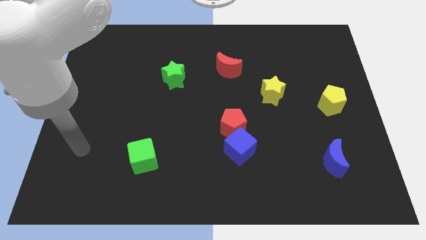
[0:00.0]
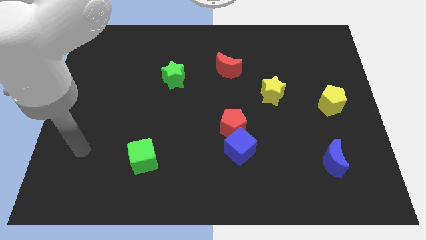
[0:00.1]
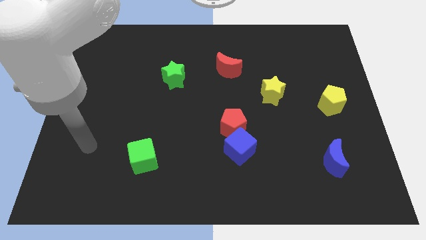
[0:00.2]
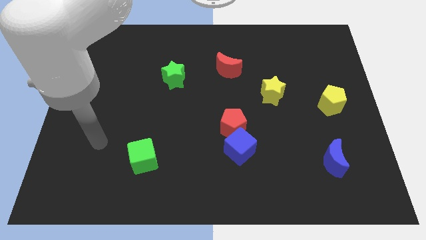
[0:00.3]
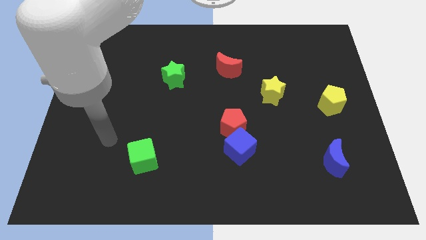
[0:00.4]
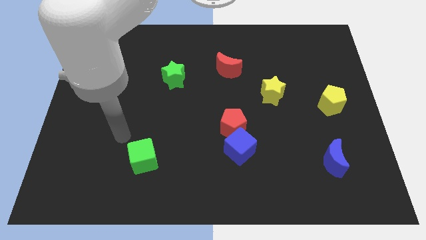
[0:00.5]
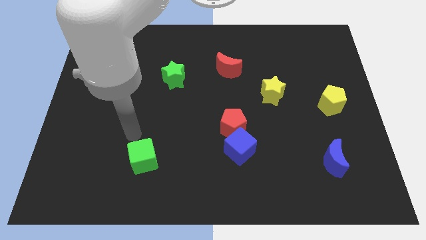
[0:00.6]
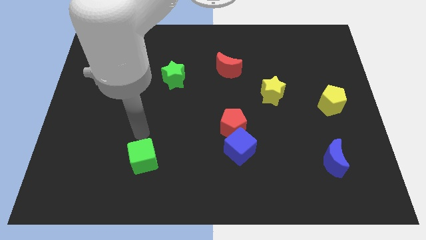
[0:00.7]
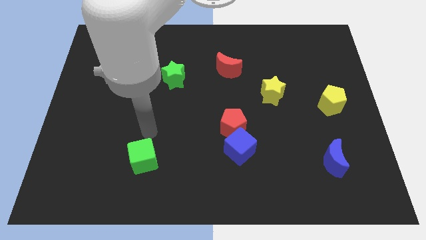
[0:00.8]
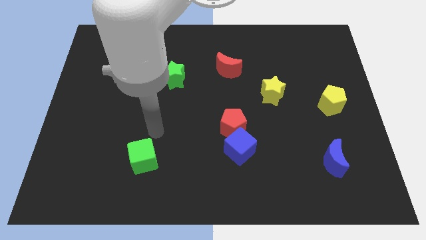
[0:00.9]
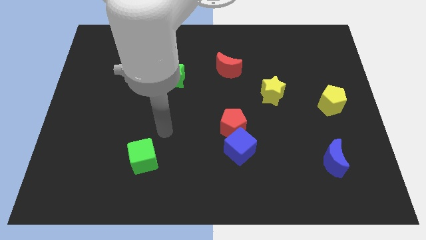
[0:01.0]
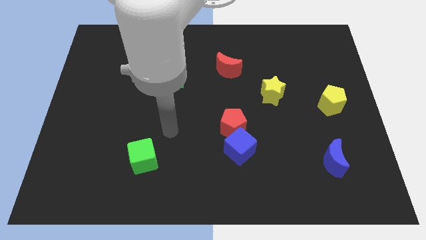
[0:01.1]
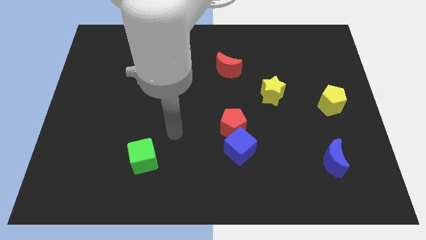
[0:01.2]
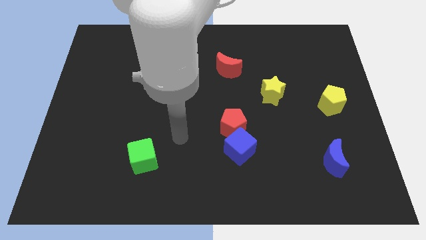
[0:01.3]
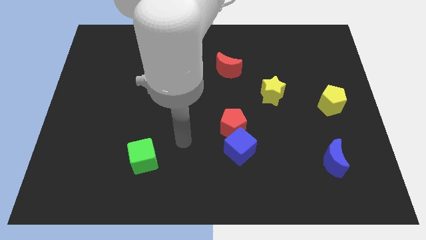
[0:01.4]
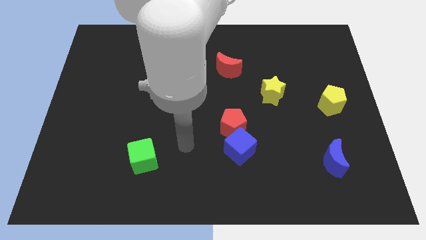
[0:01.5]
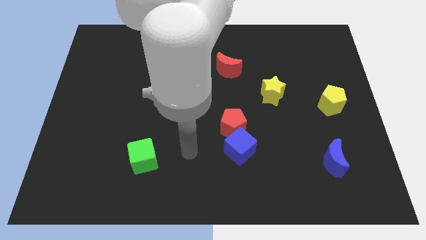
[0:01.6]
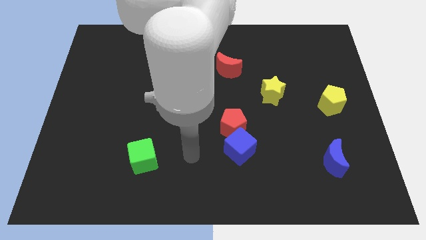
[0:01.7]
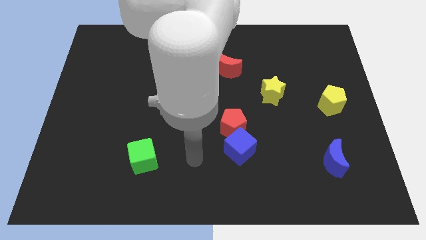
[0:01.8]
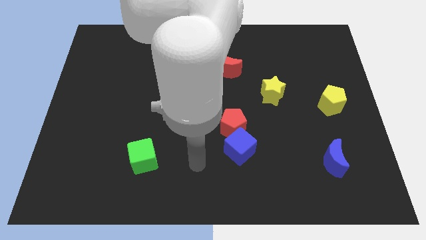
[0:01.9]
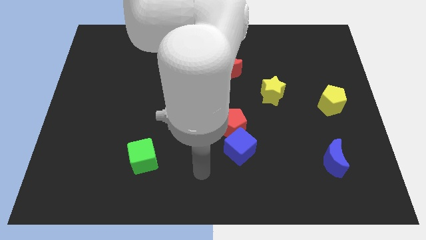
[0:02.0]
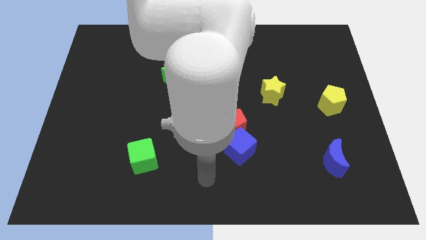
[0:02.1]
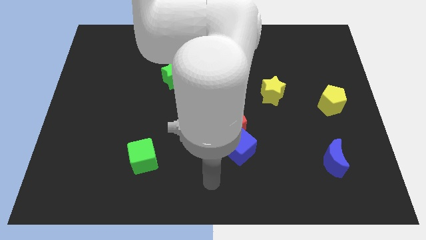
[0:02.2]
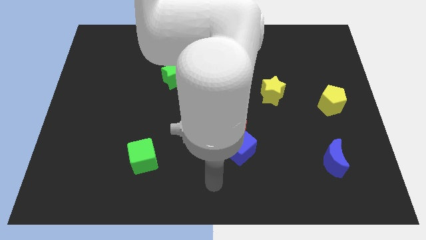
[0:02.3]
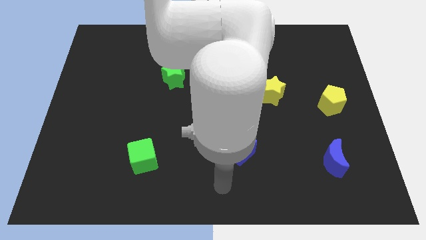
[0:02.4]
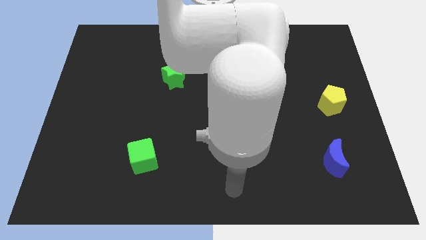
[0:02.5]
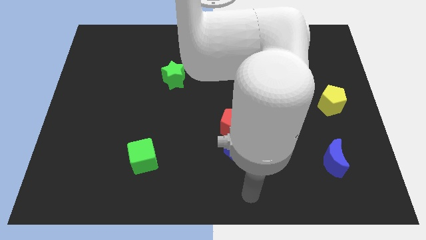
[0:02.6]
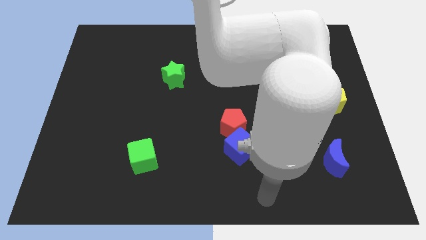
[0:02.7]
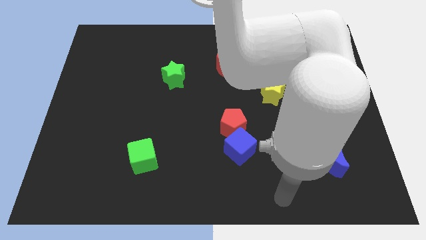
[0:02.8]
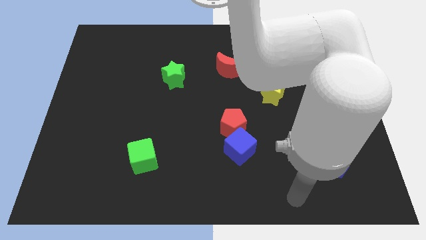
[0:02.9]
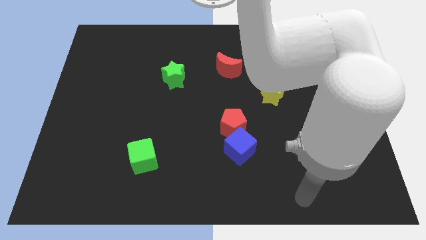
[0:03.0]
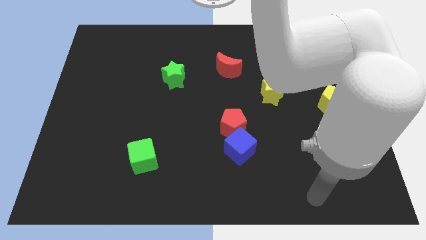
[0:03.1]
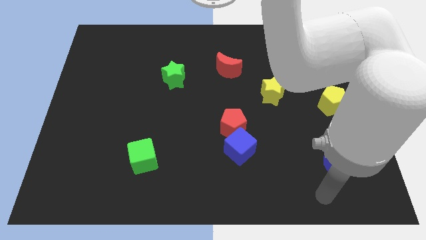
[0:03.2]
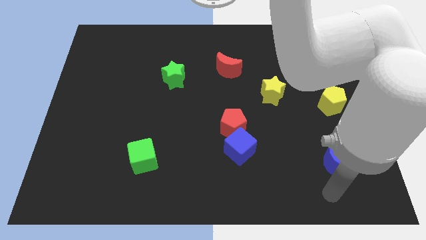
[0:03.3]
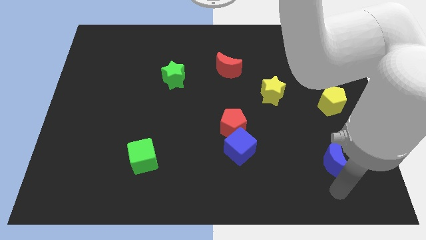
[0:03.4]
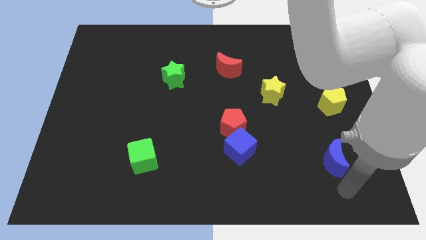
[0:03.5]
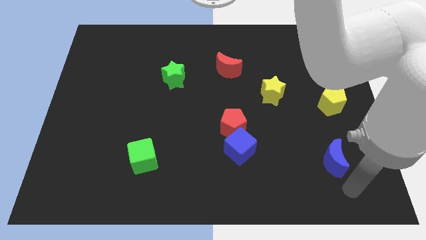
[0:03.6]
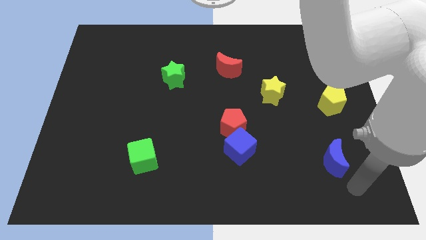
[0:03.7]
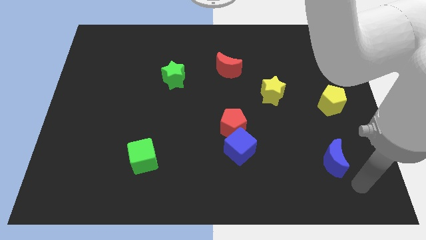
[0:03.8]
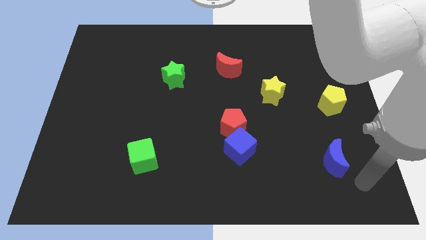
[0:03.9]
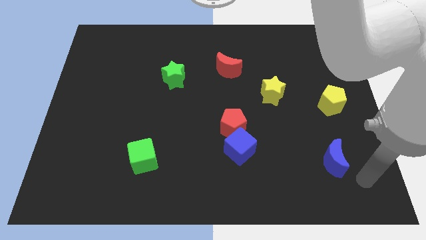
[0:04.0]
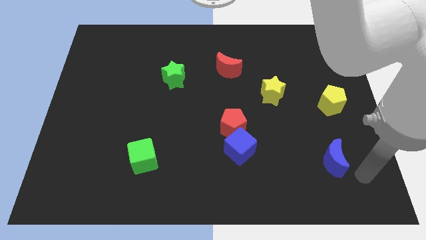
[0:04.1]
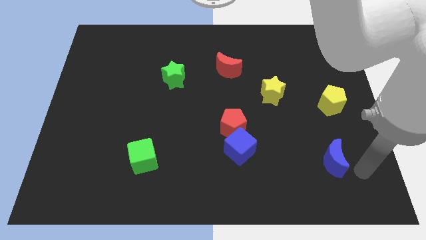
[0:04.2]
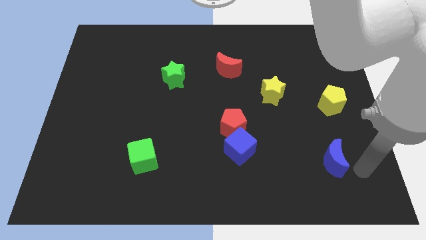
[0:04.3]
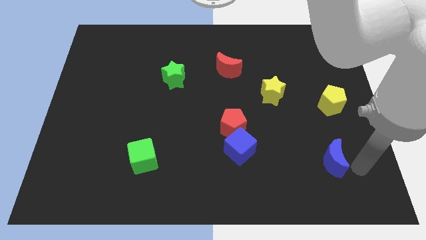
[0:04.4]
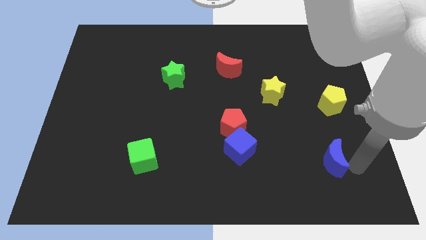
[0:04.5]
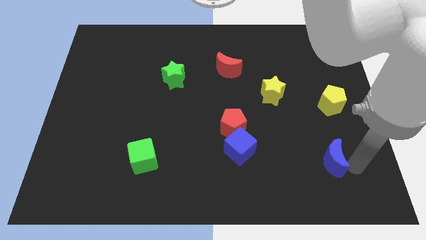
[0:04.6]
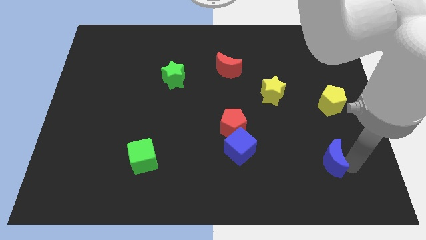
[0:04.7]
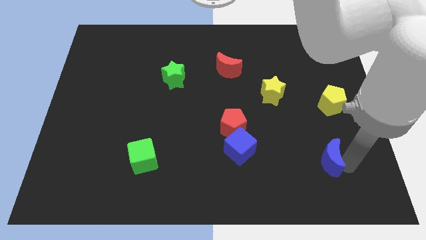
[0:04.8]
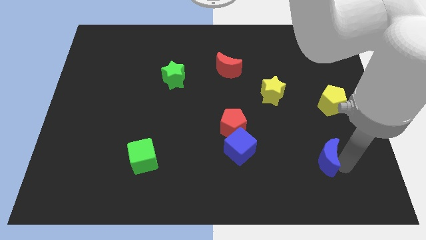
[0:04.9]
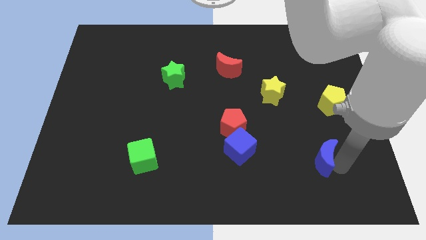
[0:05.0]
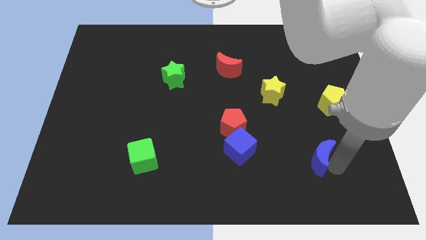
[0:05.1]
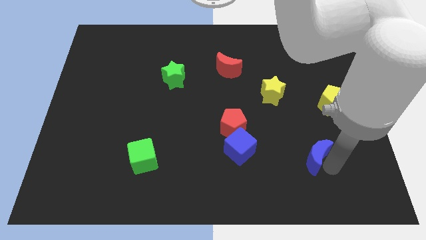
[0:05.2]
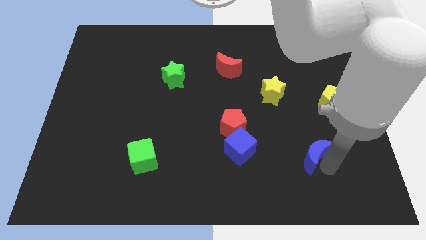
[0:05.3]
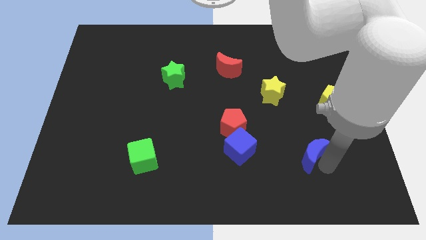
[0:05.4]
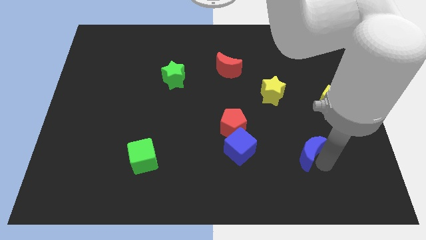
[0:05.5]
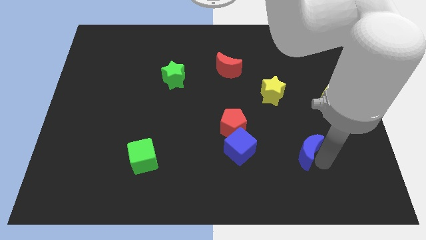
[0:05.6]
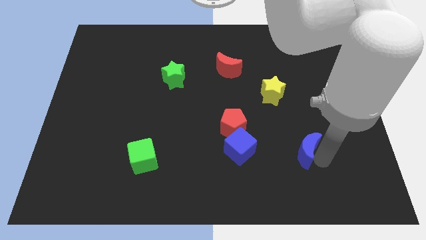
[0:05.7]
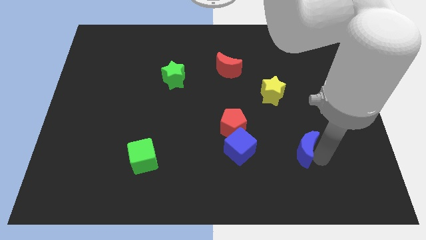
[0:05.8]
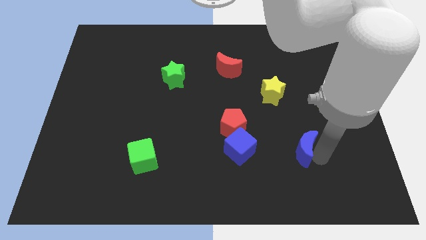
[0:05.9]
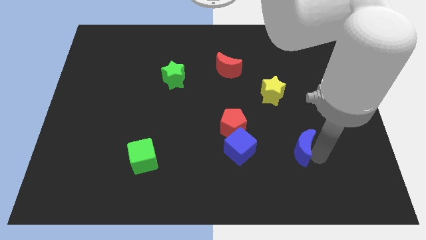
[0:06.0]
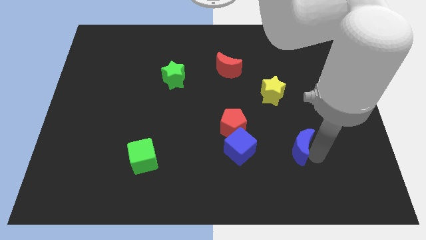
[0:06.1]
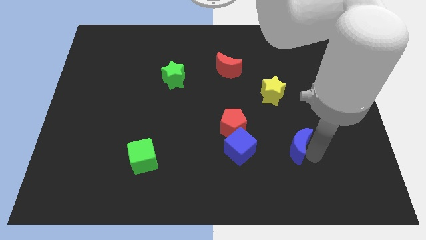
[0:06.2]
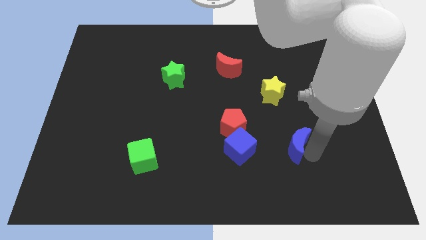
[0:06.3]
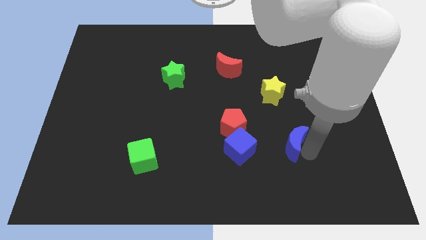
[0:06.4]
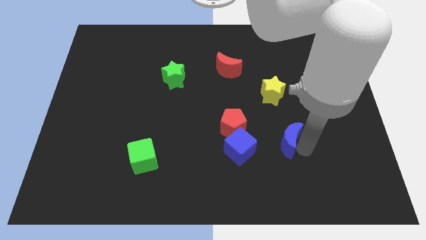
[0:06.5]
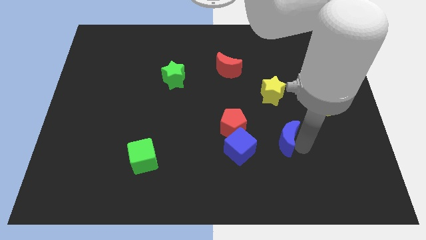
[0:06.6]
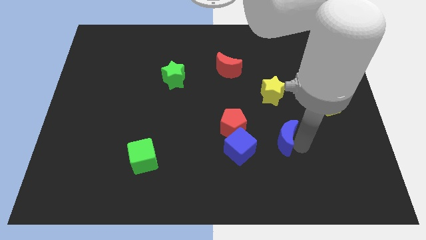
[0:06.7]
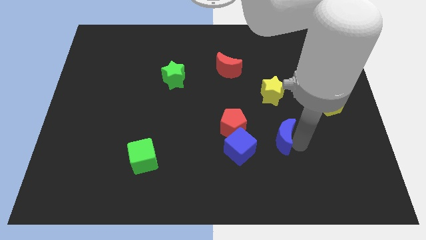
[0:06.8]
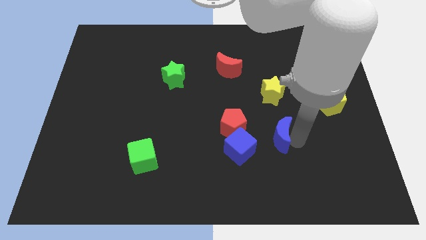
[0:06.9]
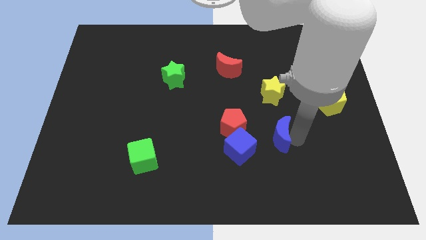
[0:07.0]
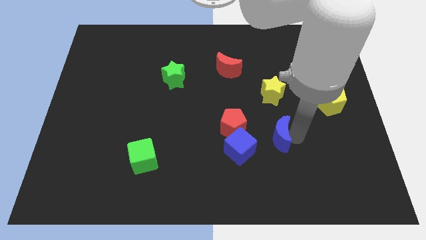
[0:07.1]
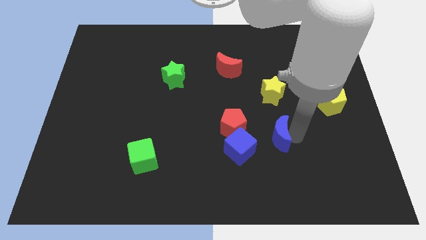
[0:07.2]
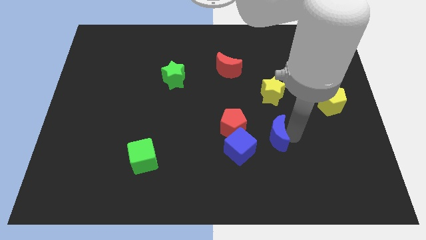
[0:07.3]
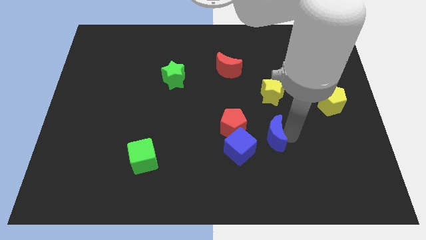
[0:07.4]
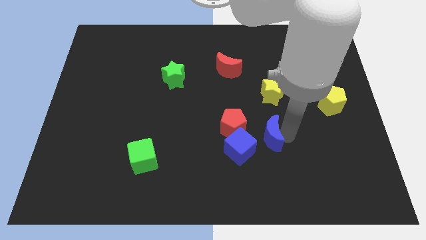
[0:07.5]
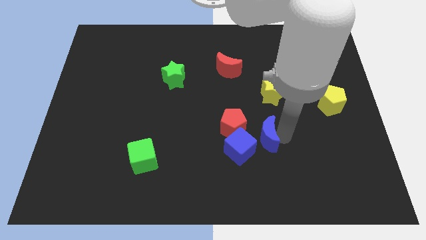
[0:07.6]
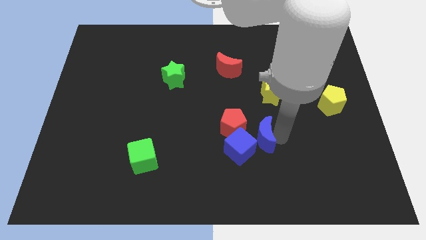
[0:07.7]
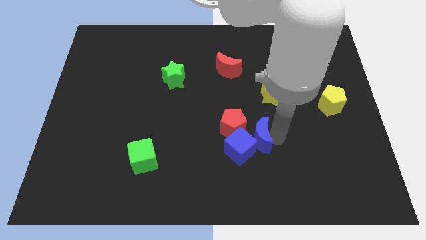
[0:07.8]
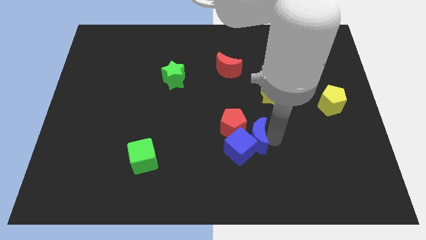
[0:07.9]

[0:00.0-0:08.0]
move the blue moon towards the blue cube

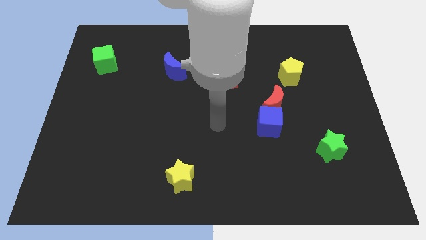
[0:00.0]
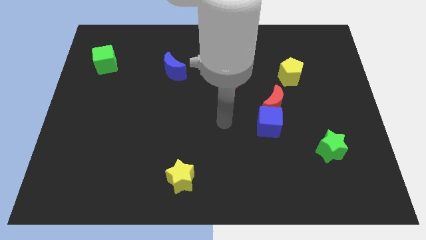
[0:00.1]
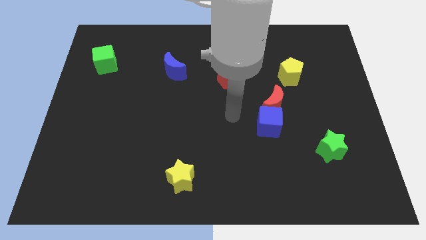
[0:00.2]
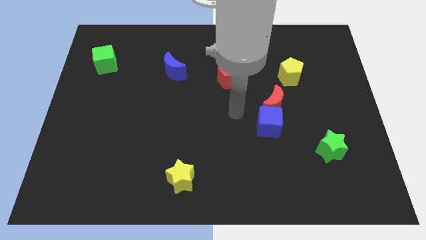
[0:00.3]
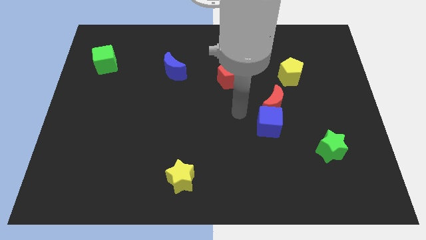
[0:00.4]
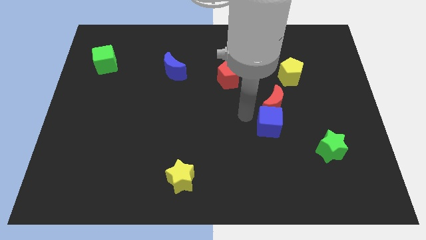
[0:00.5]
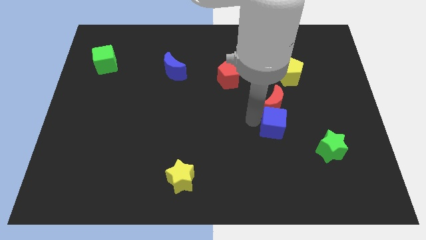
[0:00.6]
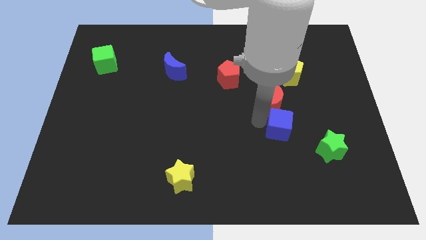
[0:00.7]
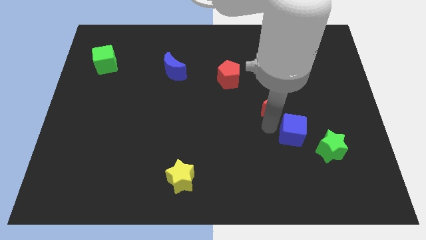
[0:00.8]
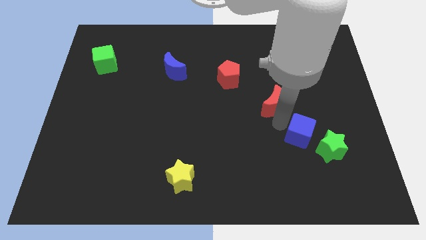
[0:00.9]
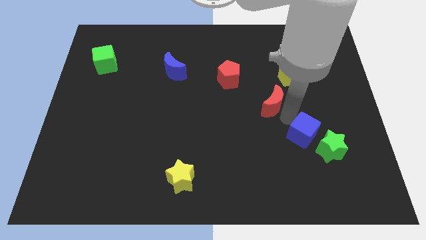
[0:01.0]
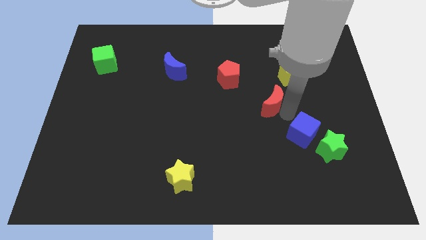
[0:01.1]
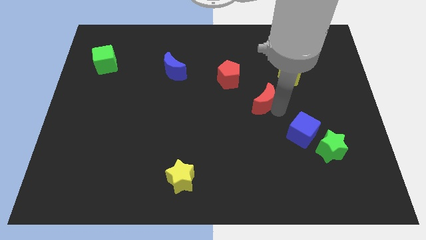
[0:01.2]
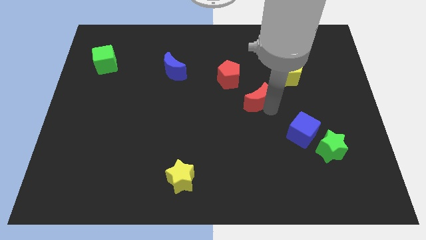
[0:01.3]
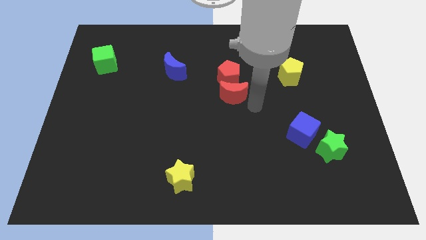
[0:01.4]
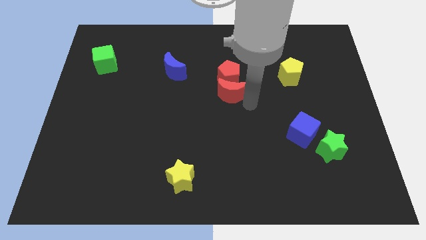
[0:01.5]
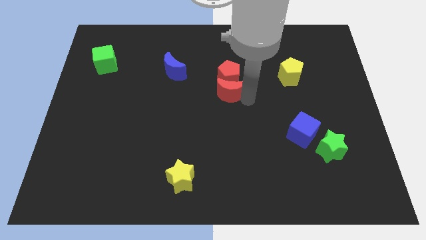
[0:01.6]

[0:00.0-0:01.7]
put the red moon towards the red pentagon
